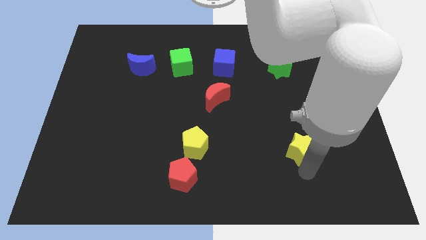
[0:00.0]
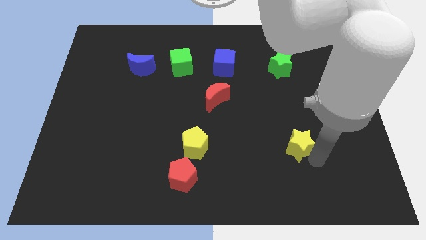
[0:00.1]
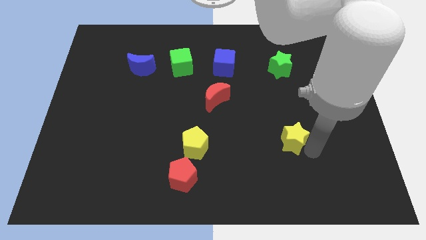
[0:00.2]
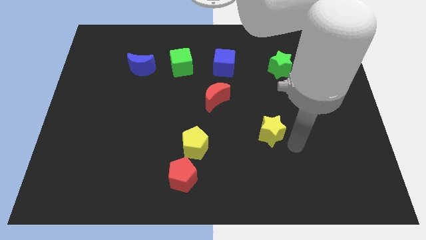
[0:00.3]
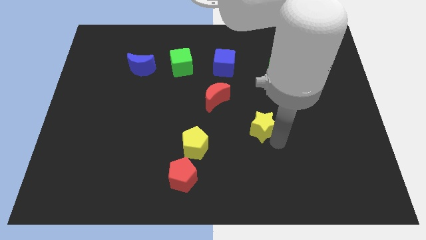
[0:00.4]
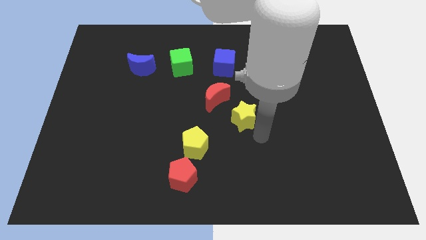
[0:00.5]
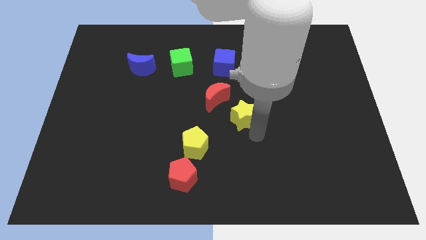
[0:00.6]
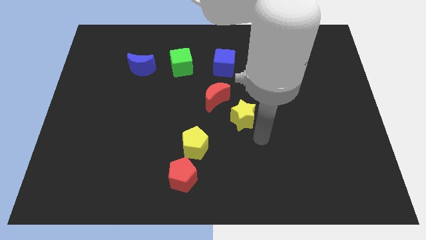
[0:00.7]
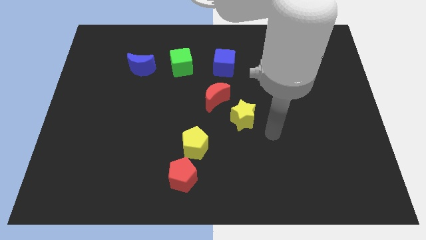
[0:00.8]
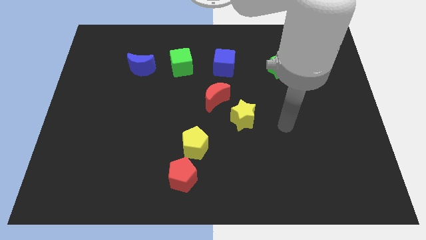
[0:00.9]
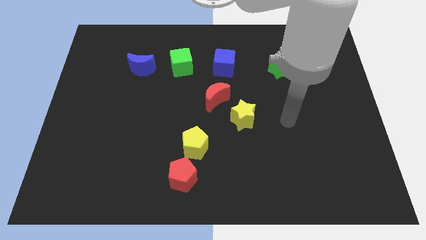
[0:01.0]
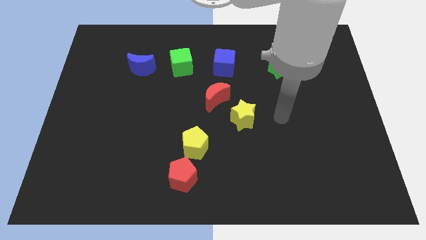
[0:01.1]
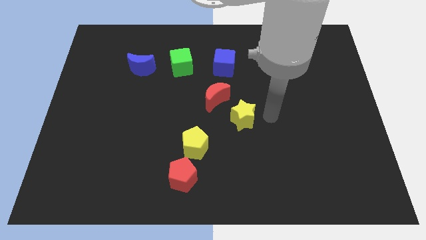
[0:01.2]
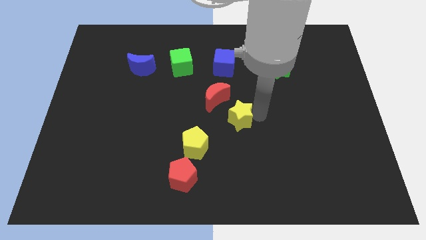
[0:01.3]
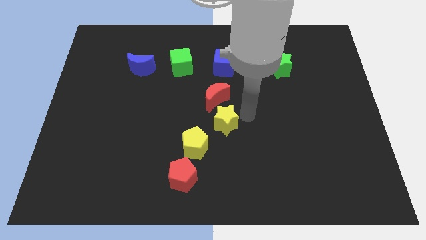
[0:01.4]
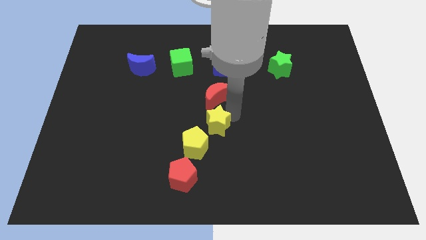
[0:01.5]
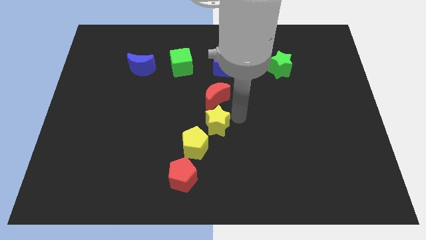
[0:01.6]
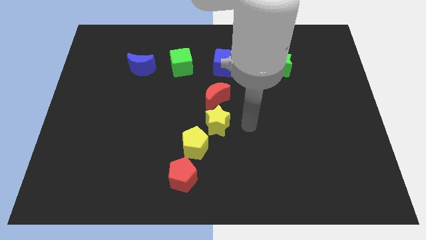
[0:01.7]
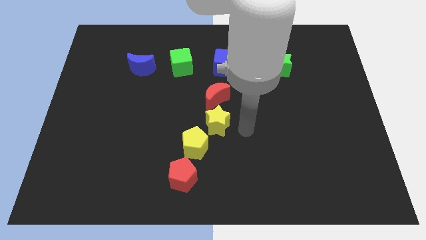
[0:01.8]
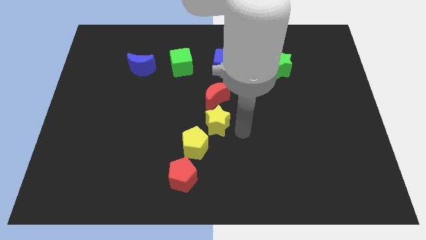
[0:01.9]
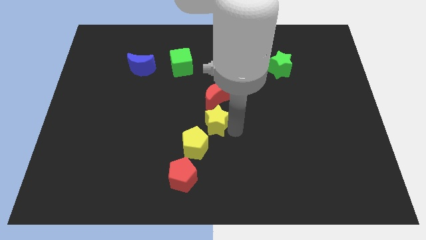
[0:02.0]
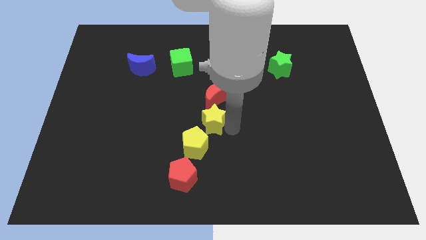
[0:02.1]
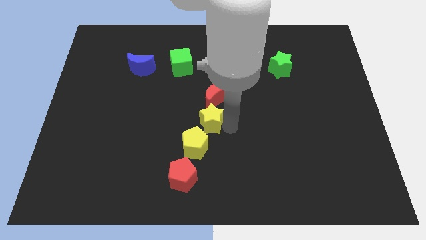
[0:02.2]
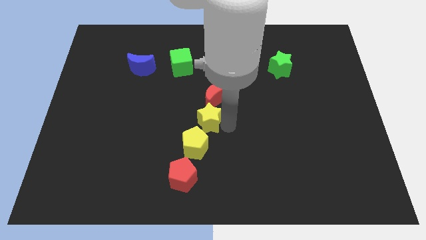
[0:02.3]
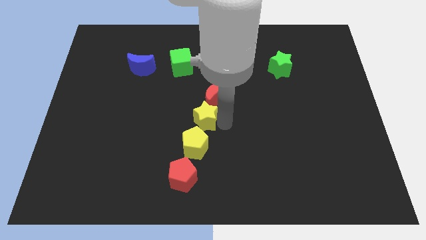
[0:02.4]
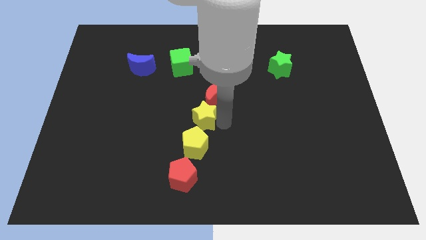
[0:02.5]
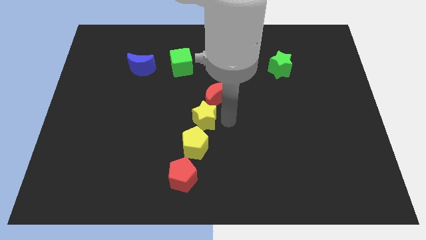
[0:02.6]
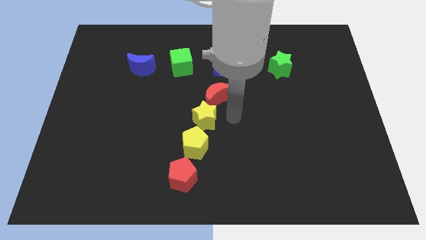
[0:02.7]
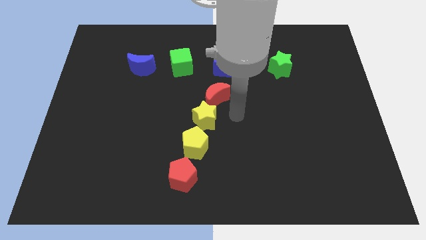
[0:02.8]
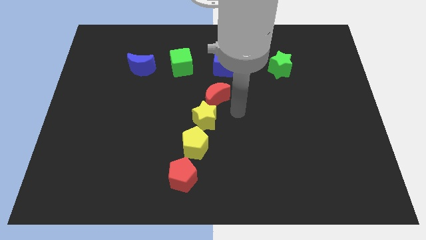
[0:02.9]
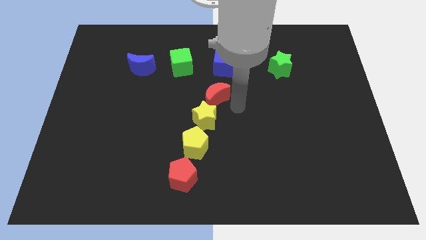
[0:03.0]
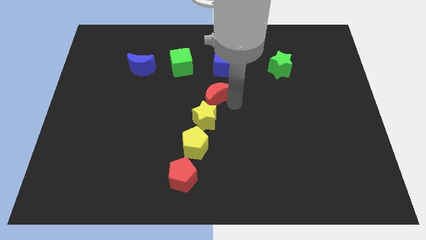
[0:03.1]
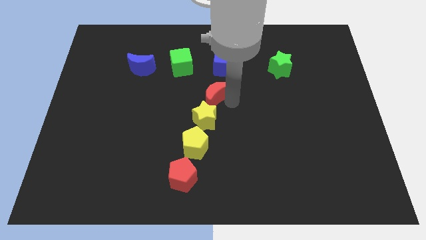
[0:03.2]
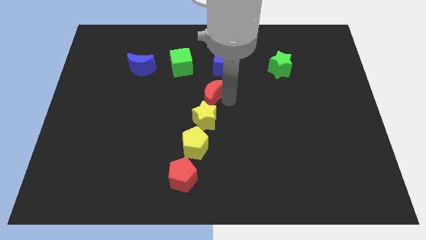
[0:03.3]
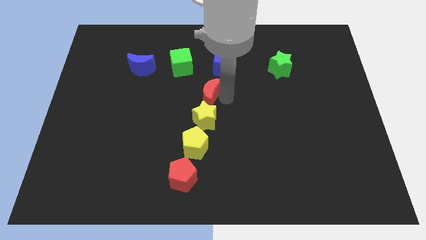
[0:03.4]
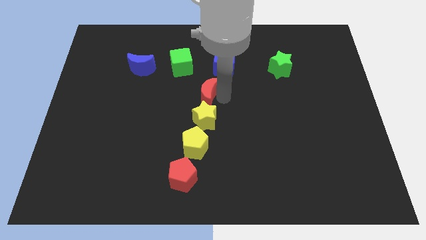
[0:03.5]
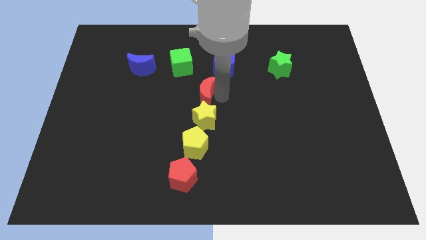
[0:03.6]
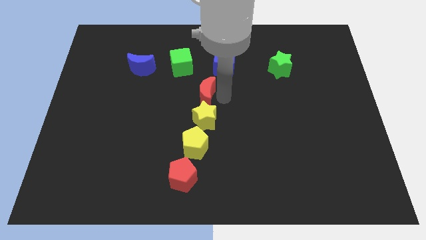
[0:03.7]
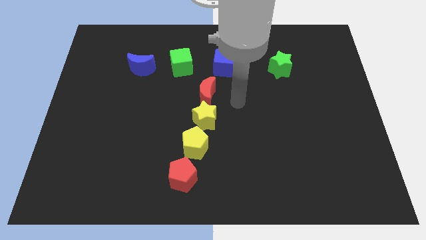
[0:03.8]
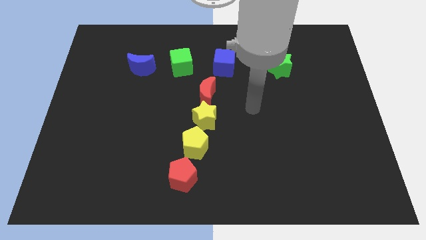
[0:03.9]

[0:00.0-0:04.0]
form a vertical line with red and the yellow blocks

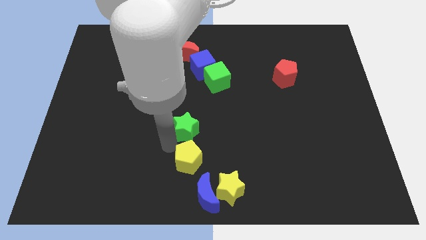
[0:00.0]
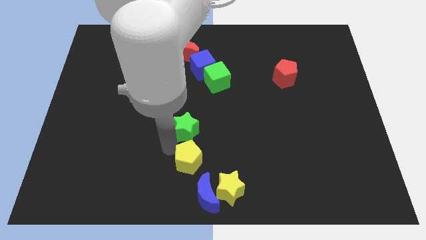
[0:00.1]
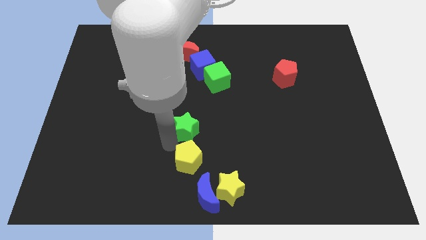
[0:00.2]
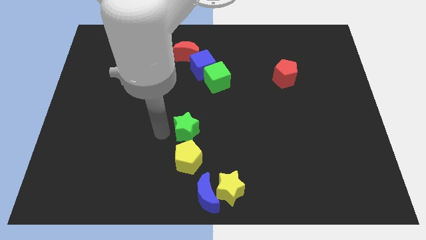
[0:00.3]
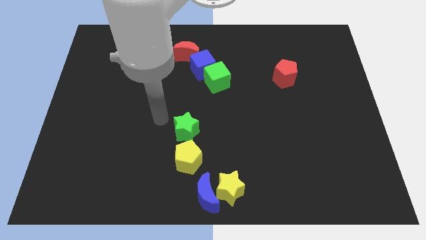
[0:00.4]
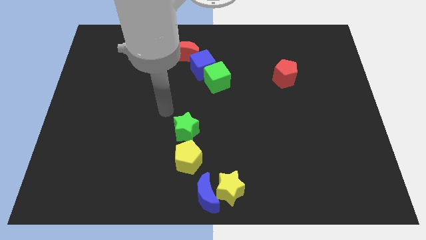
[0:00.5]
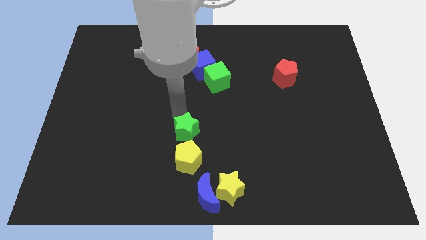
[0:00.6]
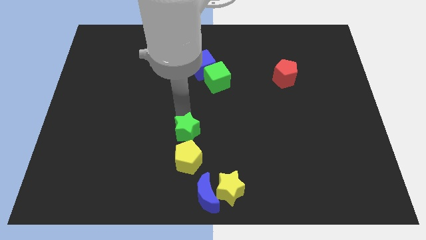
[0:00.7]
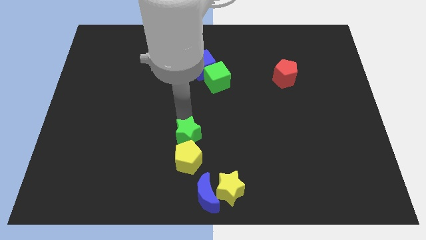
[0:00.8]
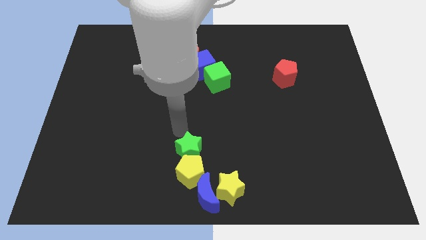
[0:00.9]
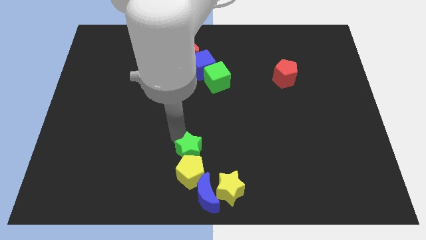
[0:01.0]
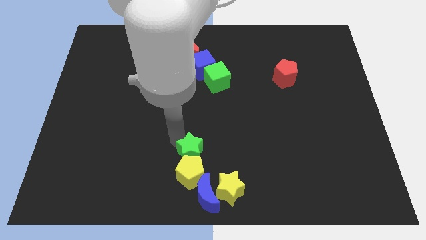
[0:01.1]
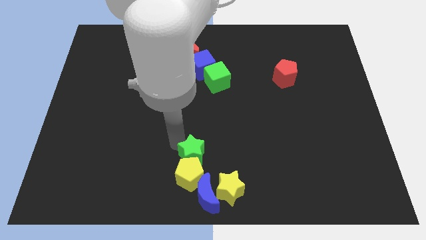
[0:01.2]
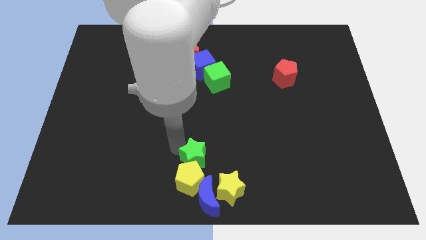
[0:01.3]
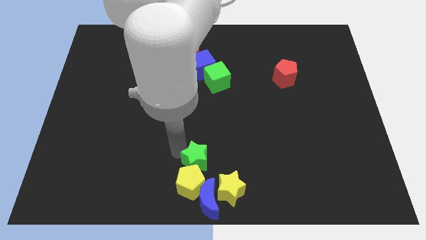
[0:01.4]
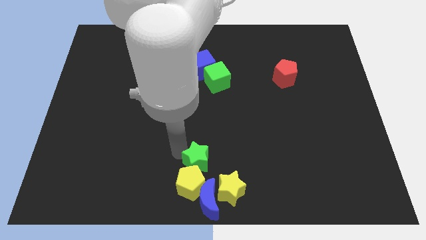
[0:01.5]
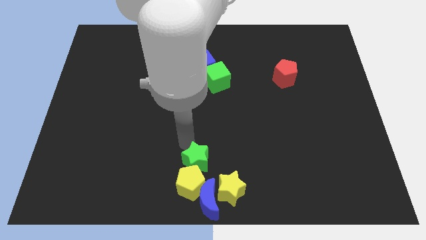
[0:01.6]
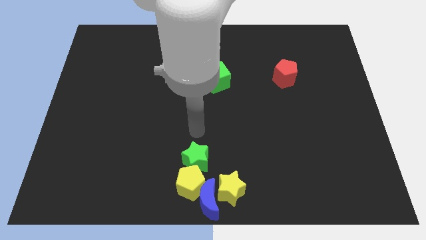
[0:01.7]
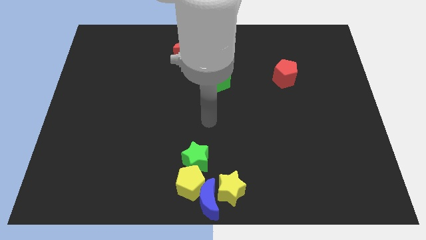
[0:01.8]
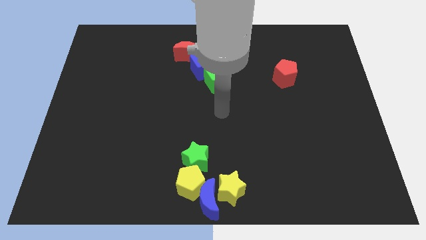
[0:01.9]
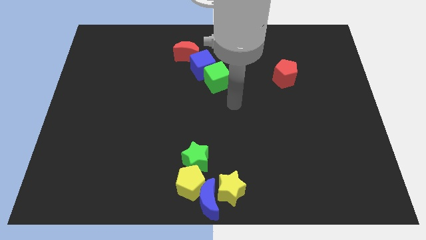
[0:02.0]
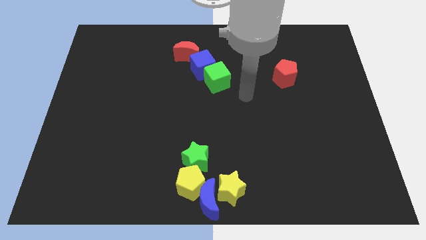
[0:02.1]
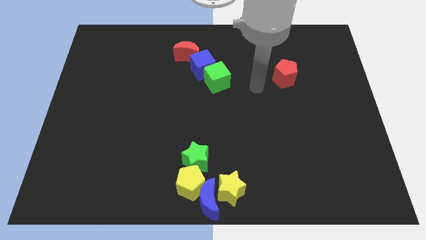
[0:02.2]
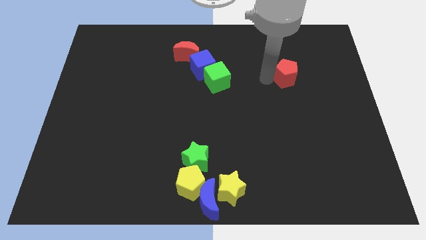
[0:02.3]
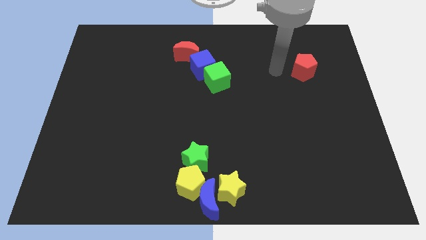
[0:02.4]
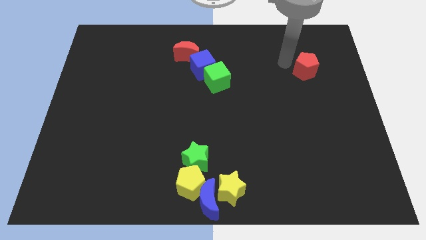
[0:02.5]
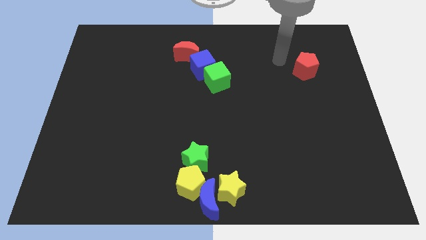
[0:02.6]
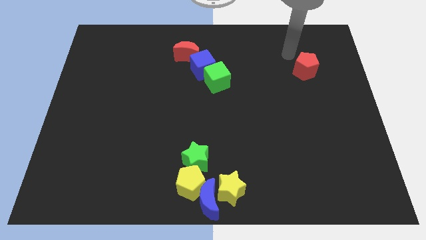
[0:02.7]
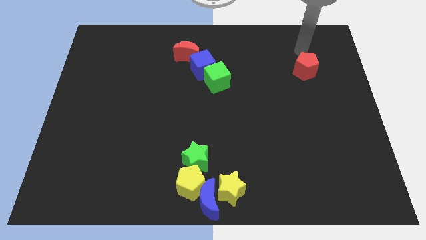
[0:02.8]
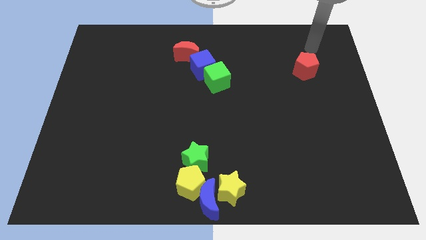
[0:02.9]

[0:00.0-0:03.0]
put the green star into the yellow pentagon

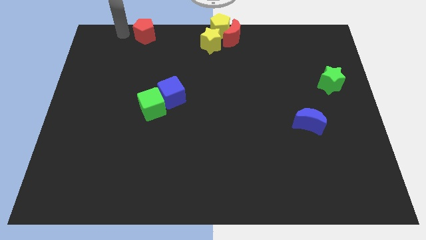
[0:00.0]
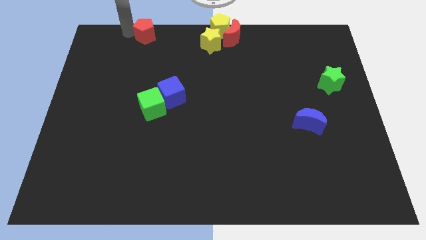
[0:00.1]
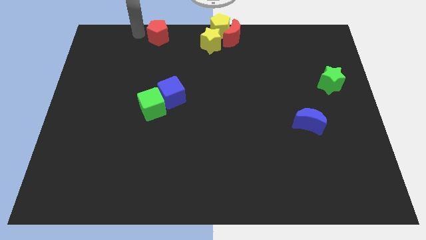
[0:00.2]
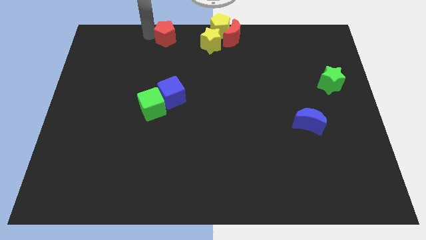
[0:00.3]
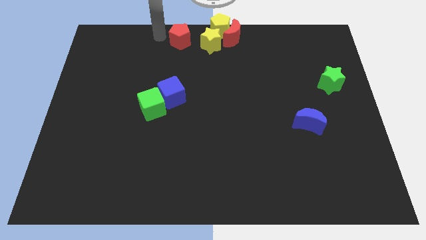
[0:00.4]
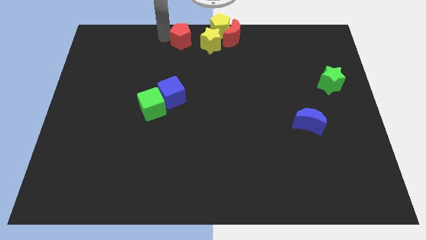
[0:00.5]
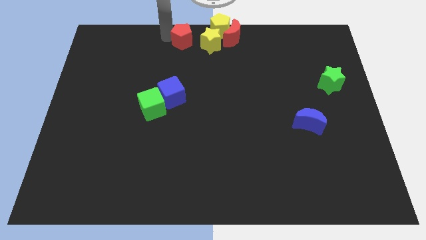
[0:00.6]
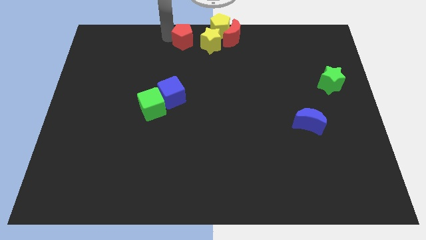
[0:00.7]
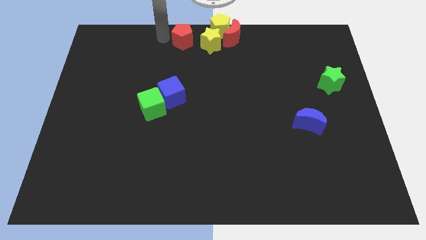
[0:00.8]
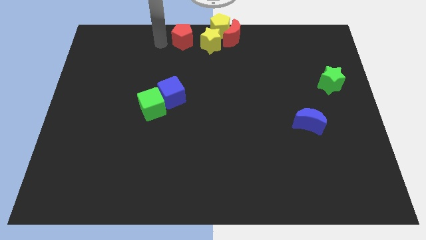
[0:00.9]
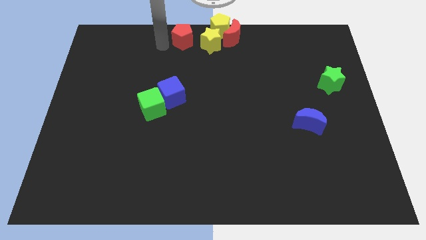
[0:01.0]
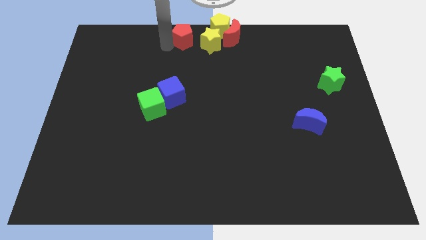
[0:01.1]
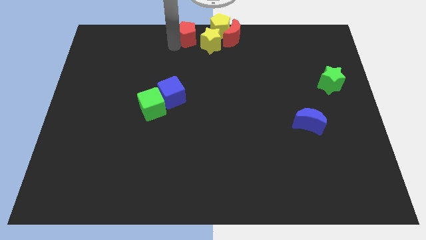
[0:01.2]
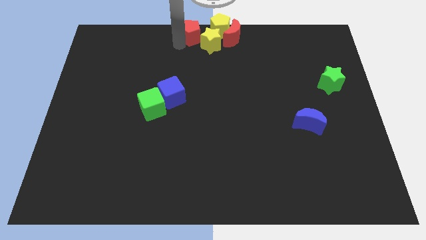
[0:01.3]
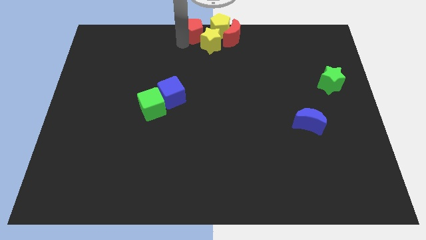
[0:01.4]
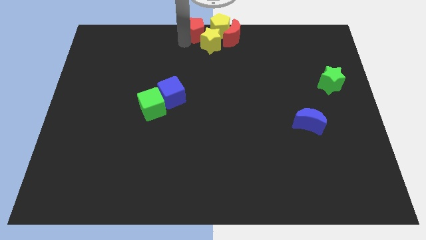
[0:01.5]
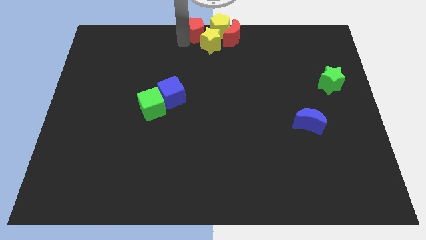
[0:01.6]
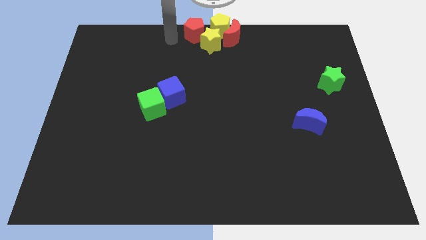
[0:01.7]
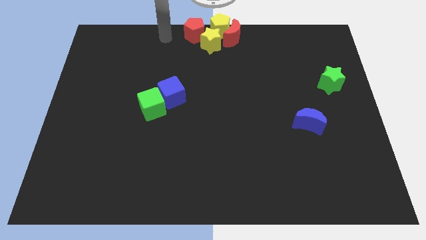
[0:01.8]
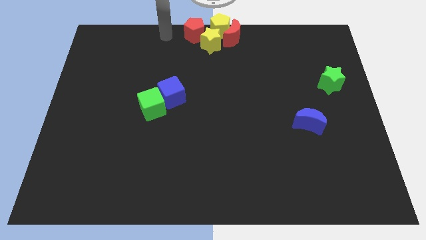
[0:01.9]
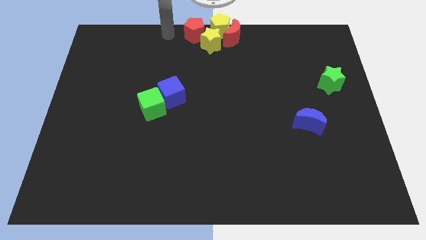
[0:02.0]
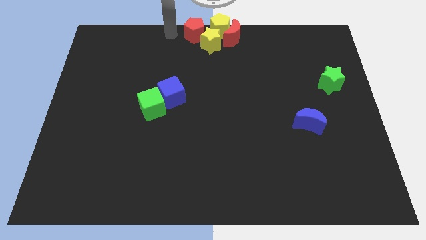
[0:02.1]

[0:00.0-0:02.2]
place the red pentagon to the left of yellow pentagon
